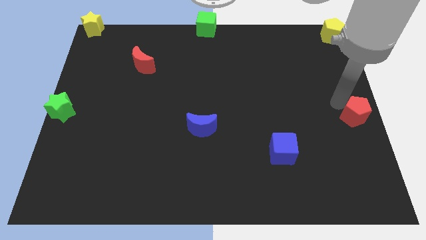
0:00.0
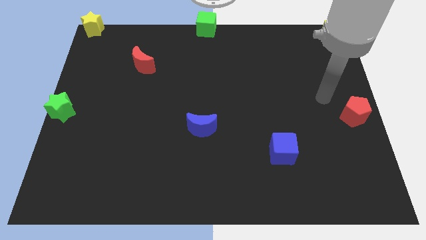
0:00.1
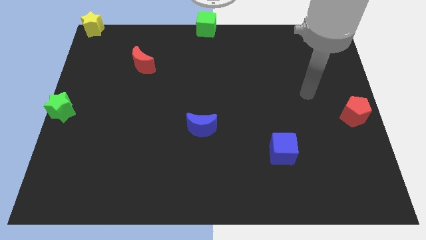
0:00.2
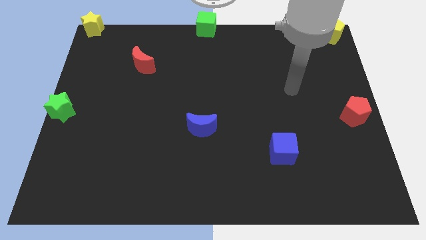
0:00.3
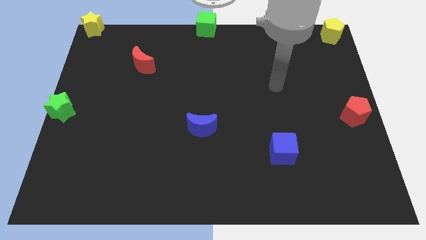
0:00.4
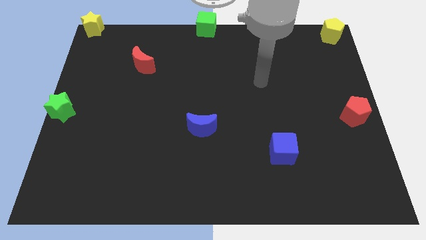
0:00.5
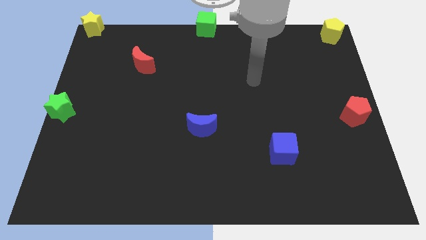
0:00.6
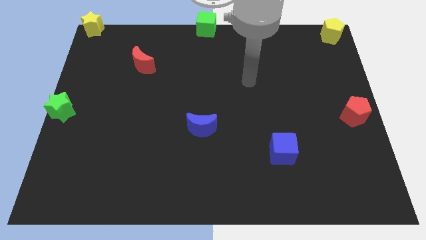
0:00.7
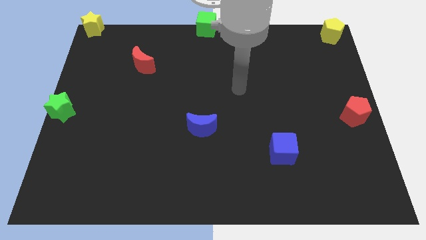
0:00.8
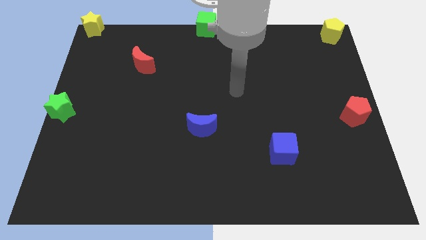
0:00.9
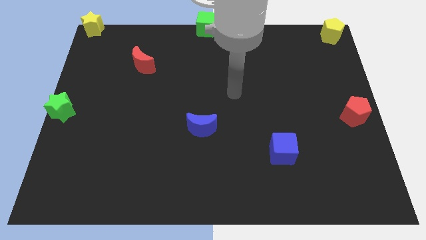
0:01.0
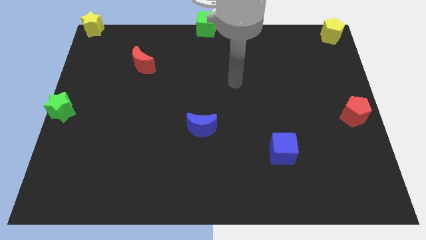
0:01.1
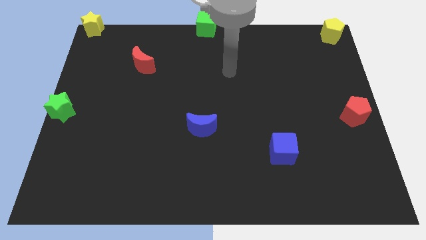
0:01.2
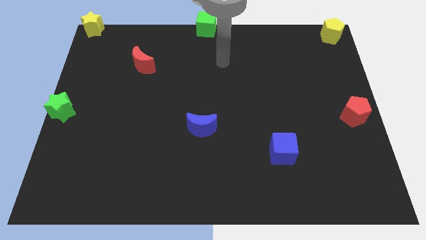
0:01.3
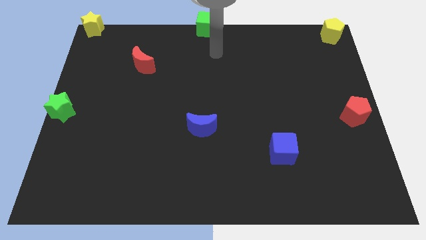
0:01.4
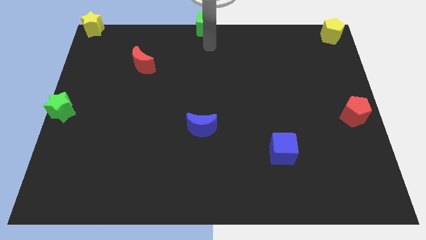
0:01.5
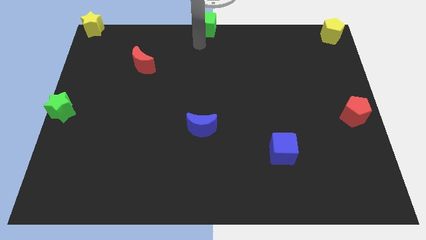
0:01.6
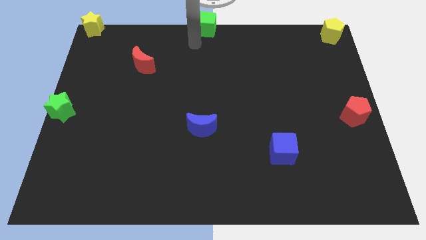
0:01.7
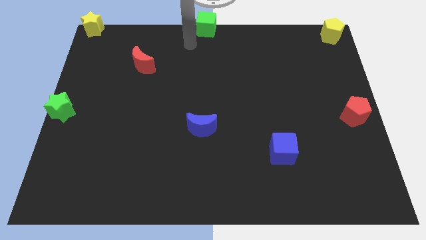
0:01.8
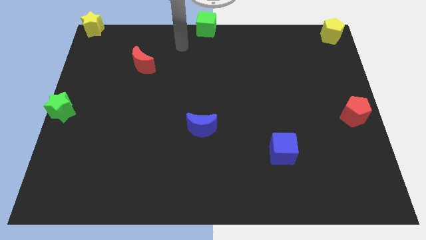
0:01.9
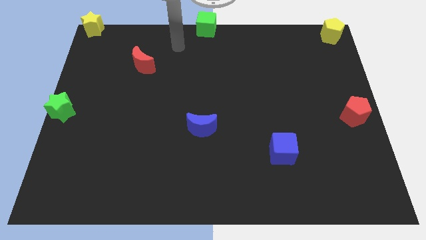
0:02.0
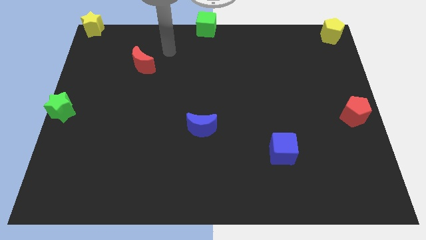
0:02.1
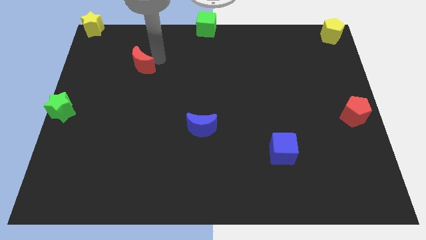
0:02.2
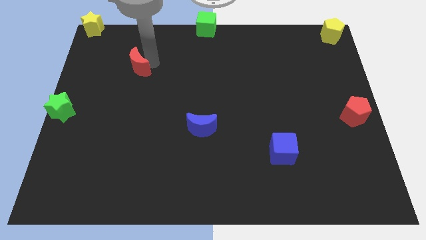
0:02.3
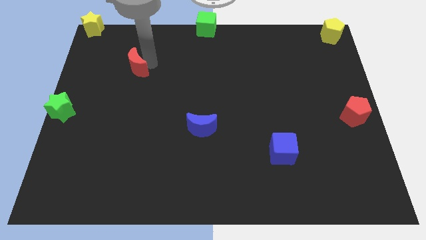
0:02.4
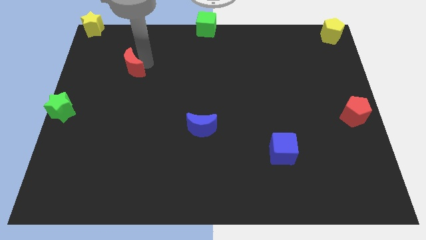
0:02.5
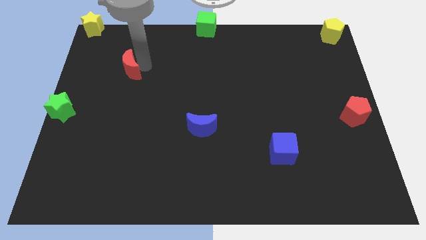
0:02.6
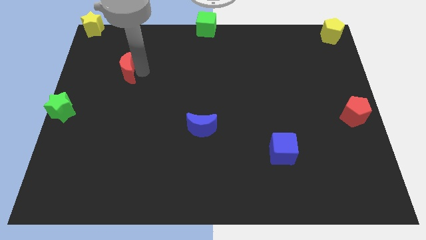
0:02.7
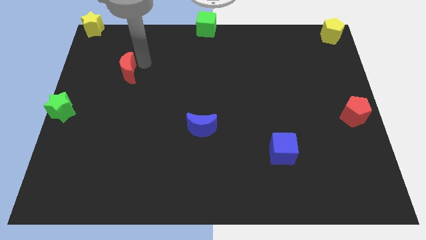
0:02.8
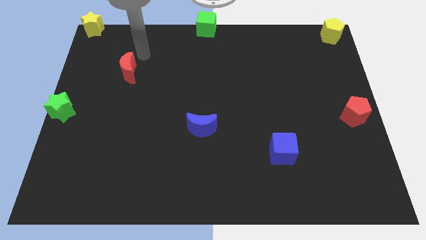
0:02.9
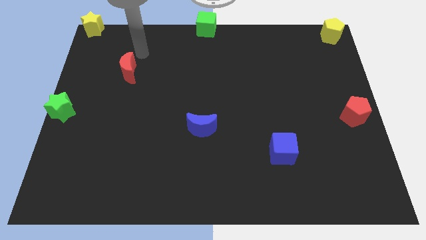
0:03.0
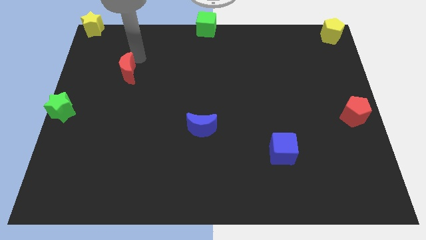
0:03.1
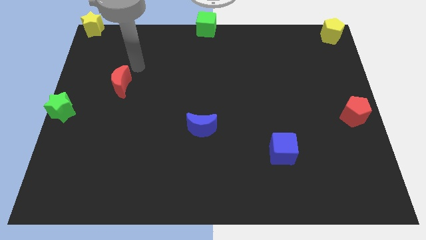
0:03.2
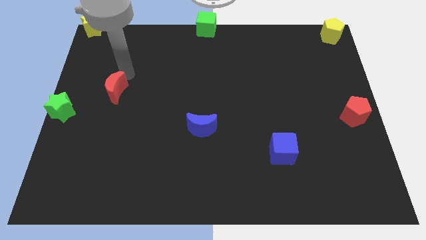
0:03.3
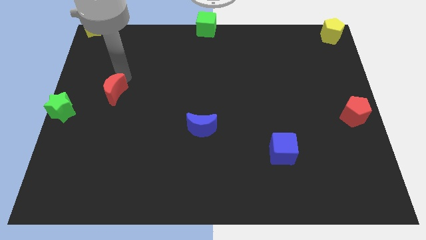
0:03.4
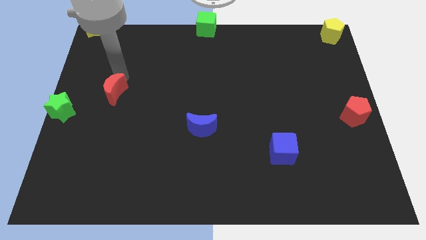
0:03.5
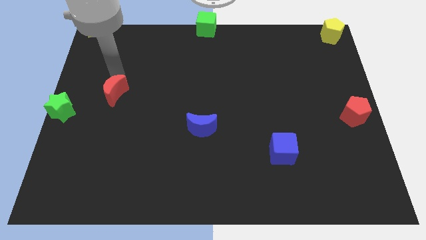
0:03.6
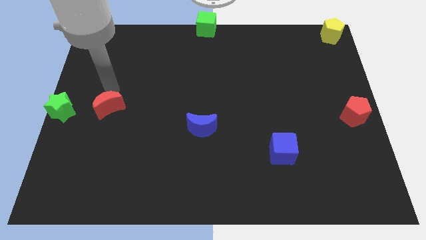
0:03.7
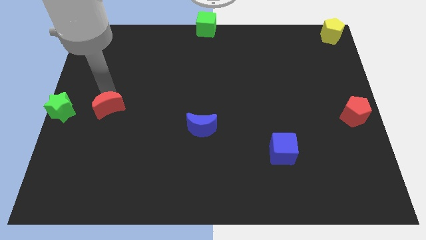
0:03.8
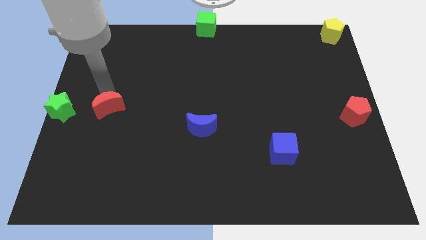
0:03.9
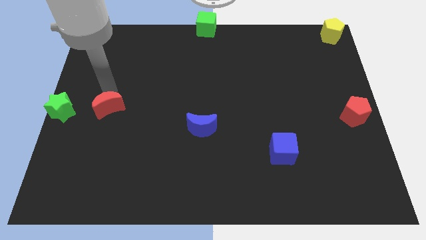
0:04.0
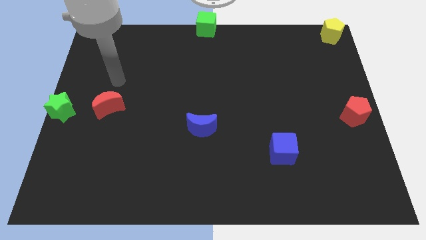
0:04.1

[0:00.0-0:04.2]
move the red moon to the right of the green star

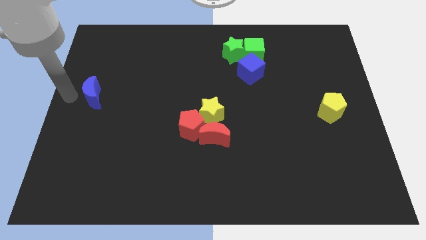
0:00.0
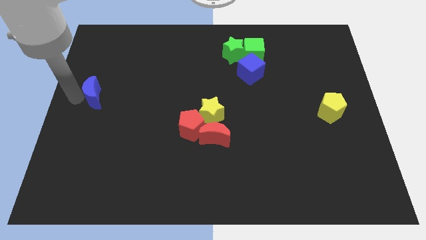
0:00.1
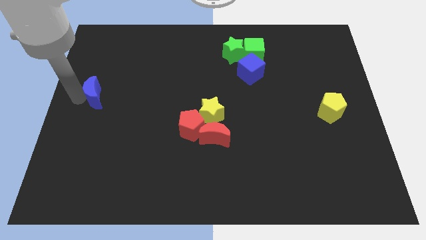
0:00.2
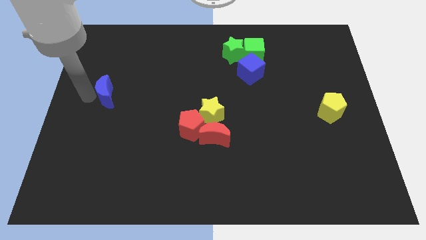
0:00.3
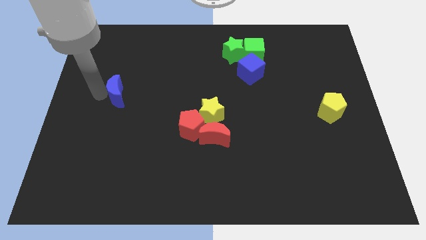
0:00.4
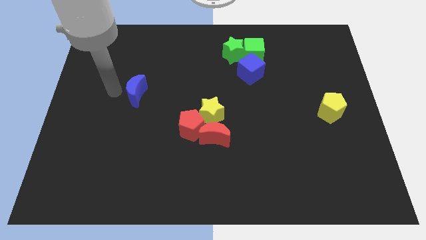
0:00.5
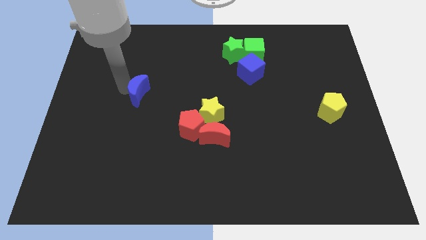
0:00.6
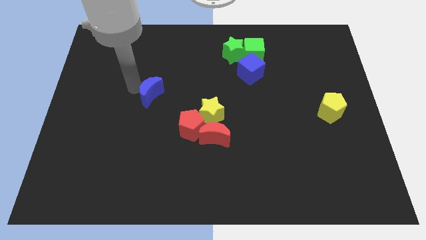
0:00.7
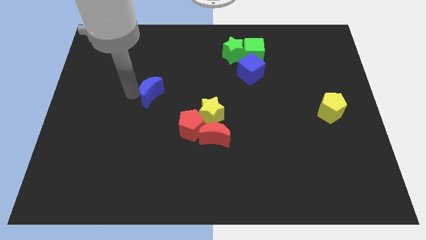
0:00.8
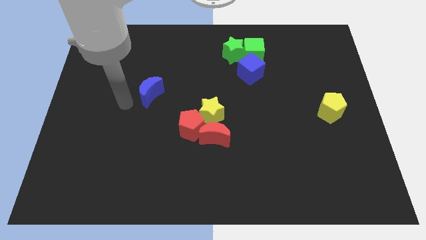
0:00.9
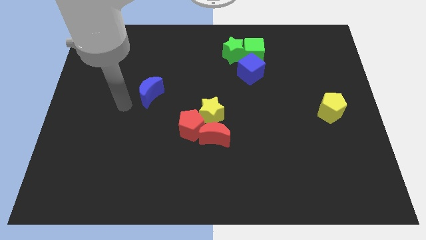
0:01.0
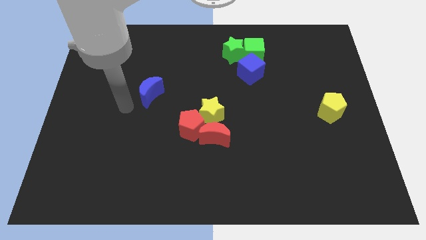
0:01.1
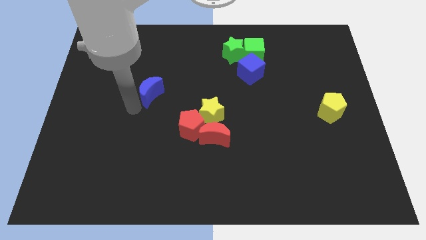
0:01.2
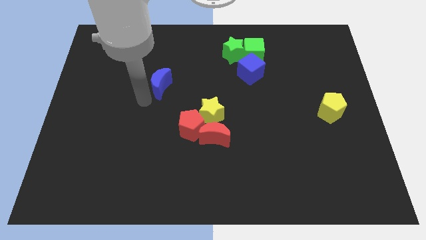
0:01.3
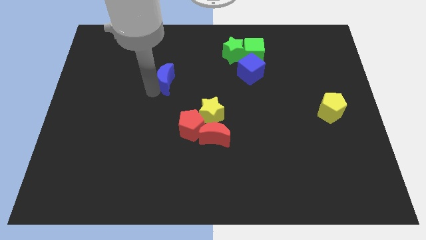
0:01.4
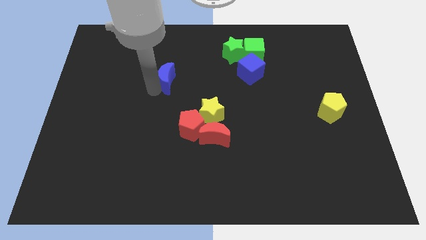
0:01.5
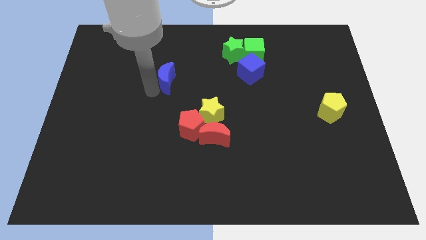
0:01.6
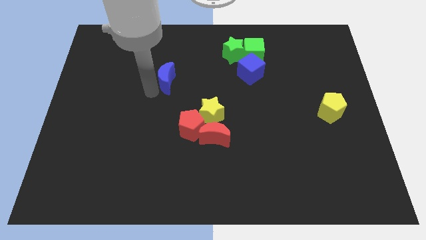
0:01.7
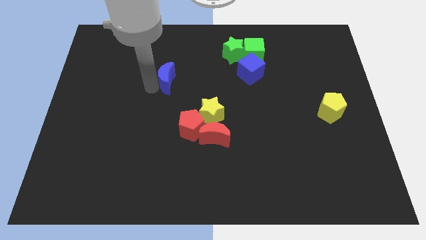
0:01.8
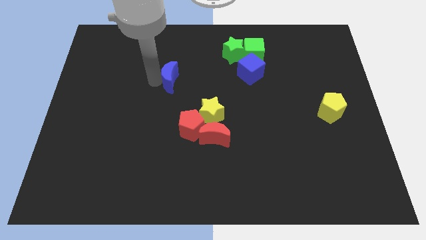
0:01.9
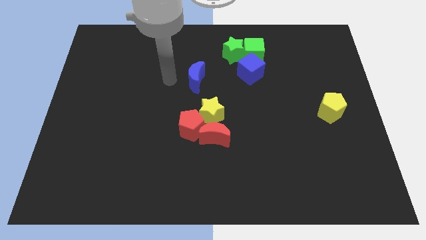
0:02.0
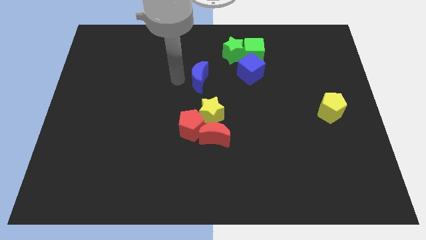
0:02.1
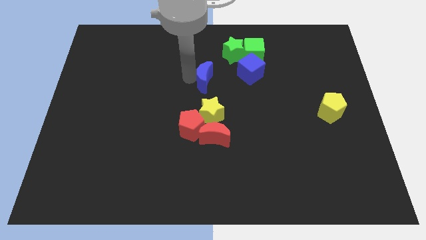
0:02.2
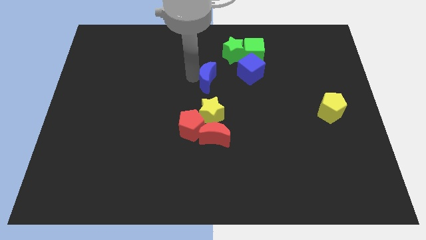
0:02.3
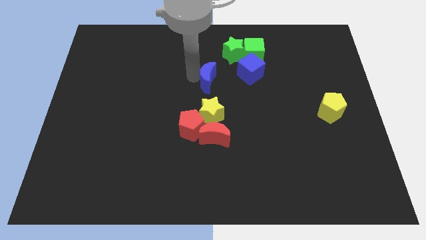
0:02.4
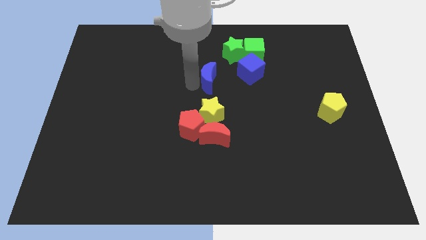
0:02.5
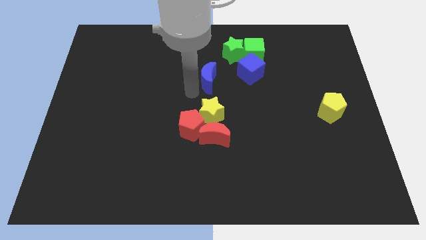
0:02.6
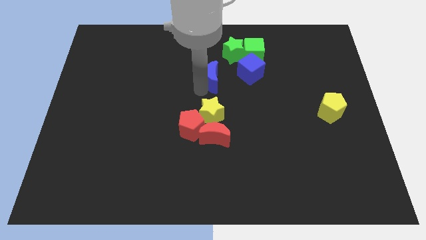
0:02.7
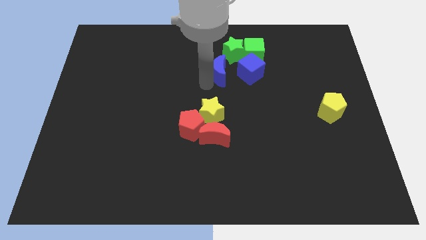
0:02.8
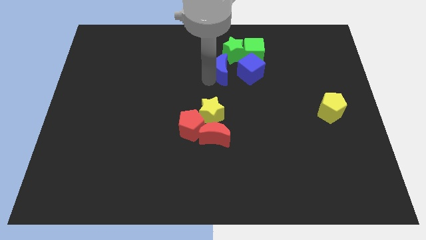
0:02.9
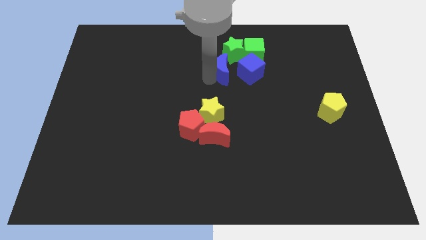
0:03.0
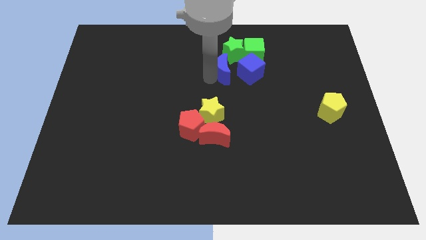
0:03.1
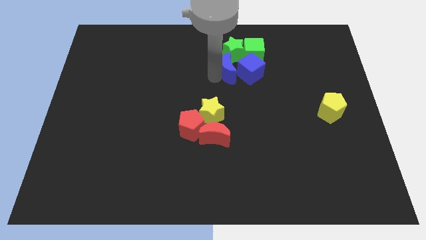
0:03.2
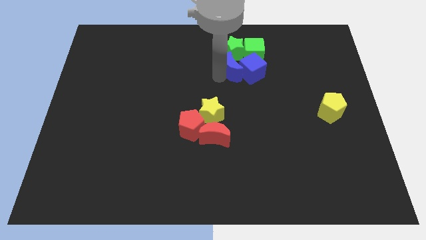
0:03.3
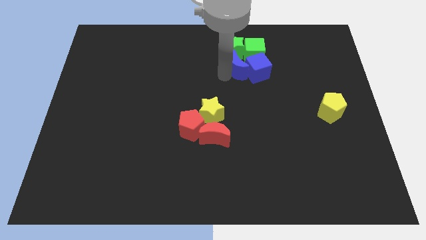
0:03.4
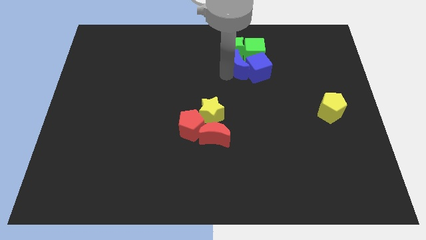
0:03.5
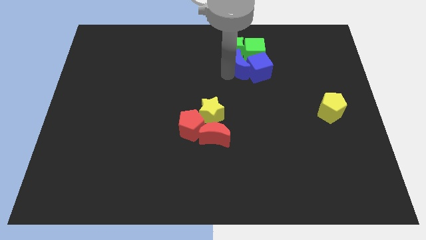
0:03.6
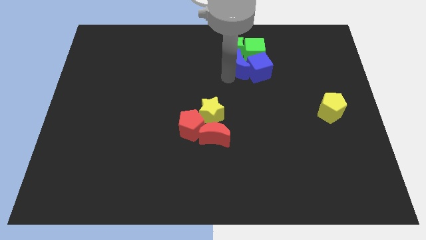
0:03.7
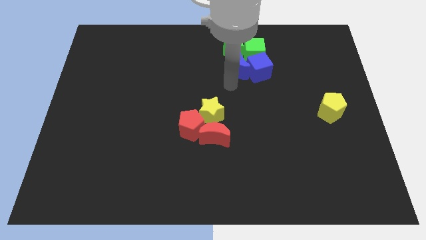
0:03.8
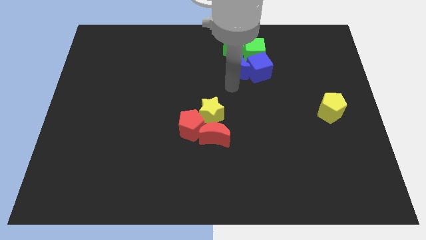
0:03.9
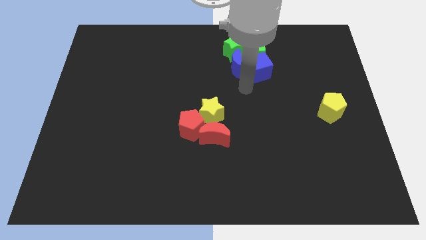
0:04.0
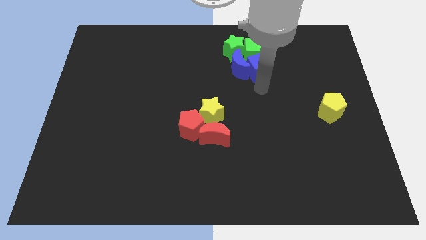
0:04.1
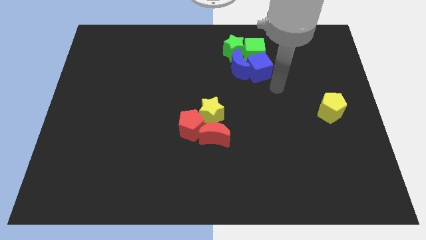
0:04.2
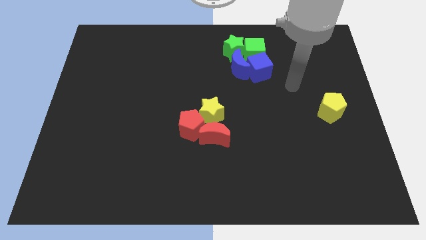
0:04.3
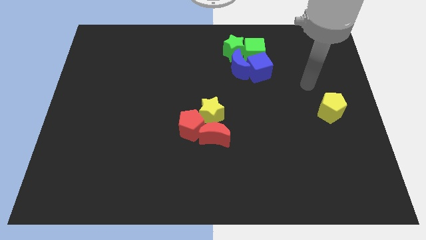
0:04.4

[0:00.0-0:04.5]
push the blue crescent into the blue cube

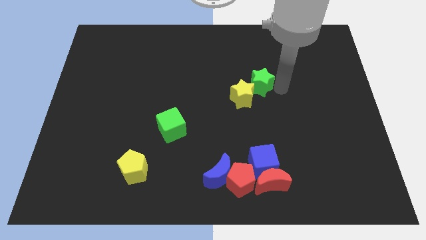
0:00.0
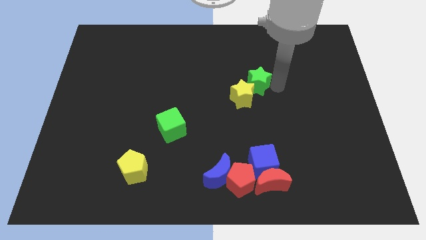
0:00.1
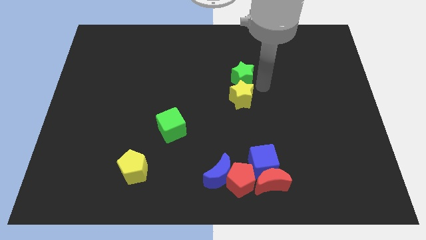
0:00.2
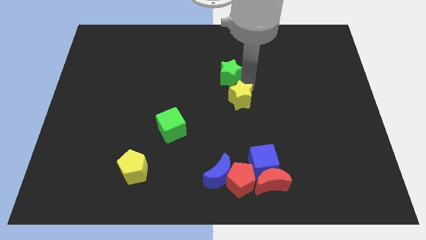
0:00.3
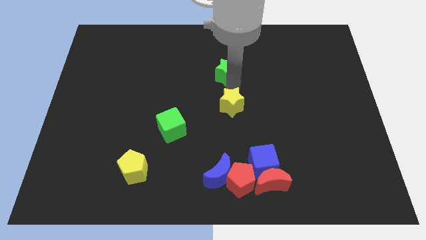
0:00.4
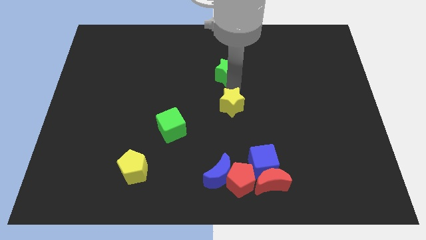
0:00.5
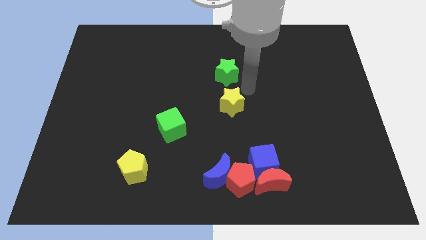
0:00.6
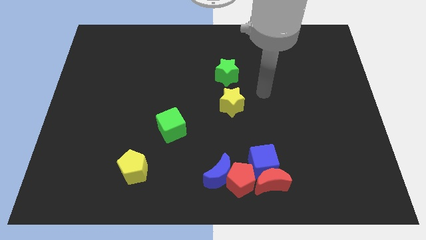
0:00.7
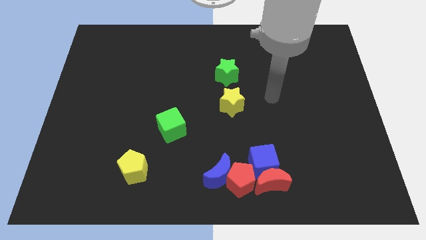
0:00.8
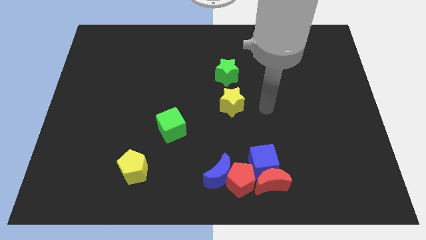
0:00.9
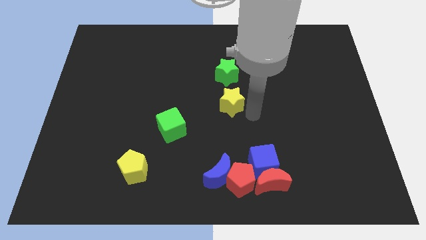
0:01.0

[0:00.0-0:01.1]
separate green star from yellow star
